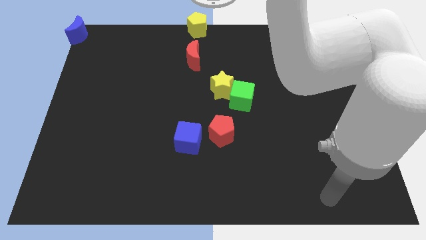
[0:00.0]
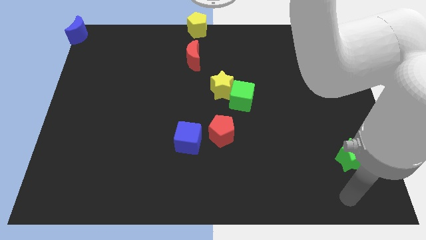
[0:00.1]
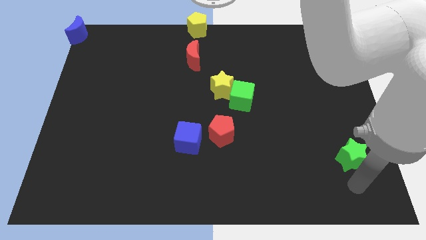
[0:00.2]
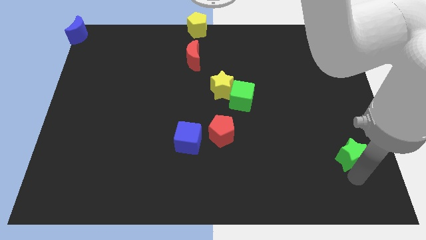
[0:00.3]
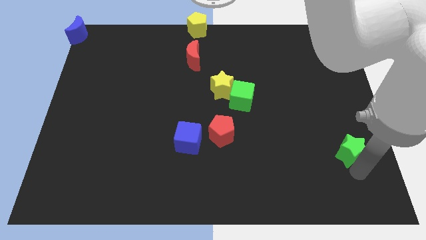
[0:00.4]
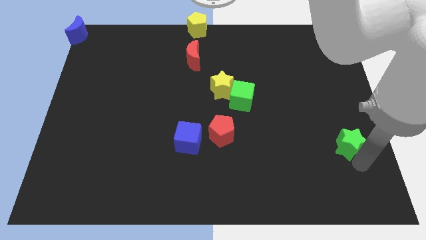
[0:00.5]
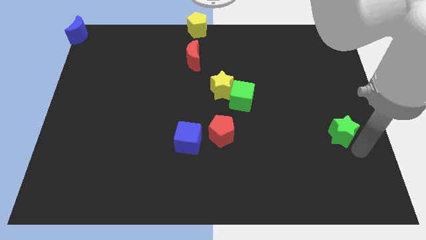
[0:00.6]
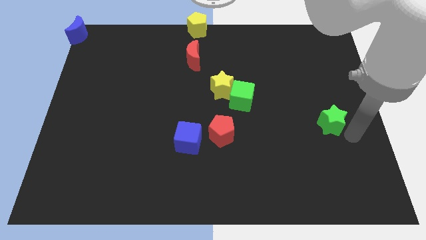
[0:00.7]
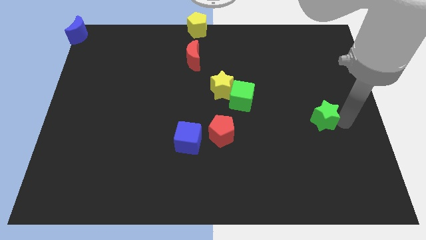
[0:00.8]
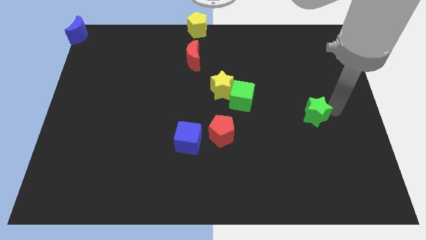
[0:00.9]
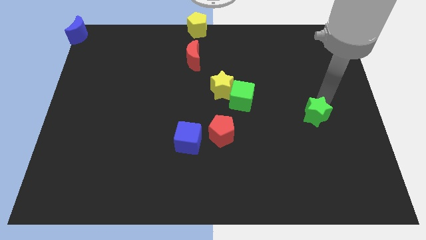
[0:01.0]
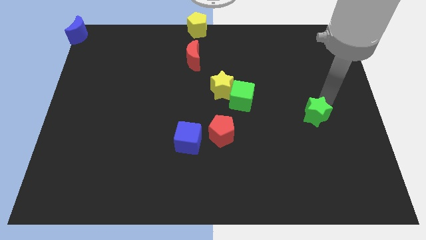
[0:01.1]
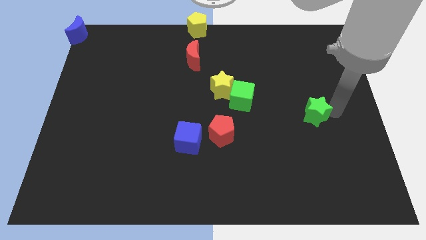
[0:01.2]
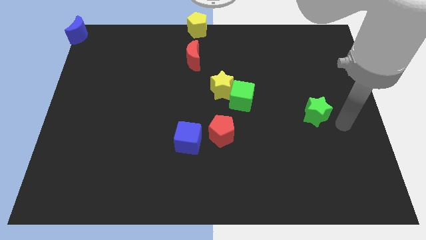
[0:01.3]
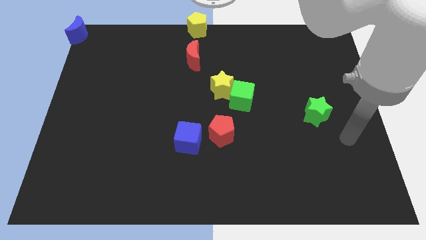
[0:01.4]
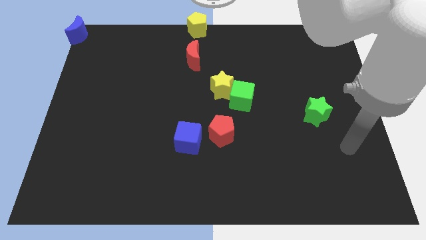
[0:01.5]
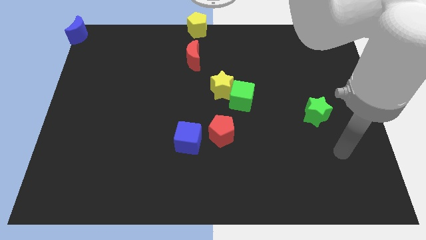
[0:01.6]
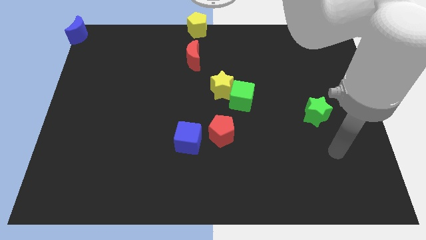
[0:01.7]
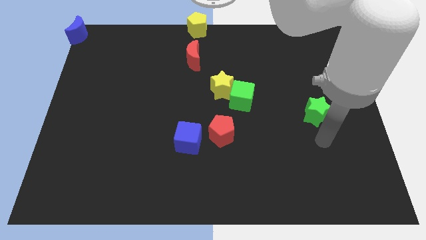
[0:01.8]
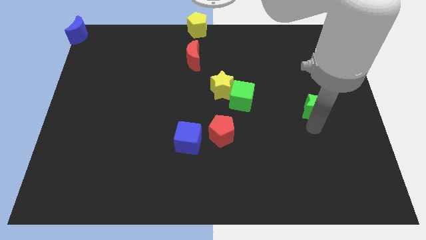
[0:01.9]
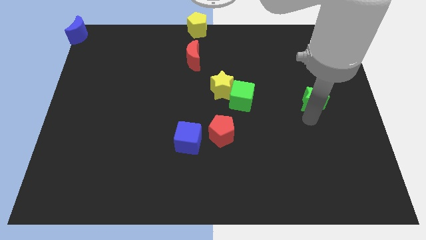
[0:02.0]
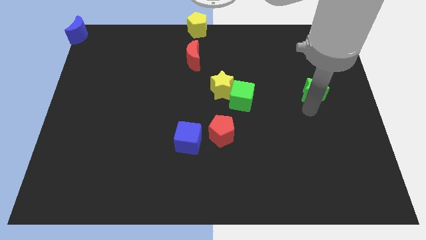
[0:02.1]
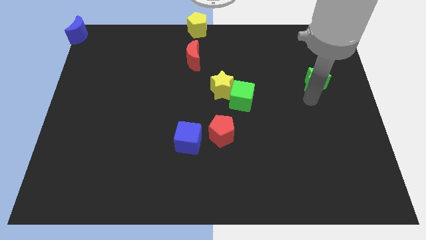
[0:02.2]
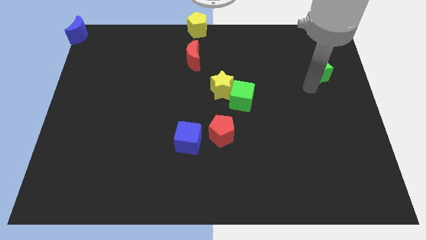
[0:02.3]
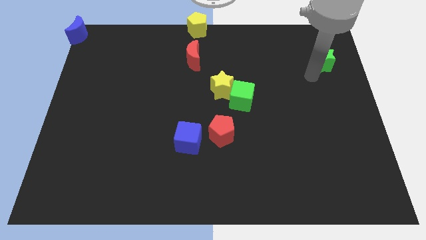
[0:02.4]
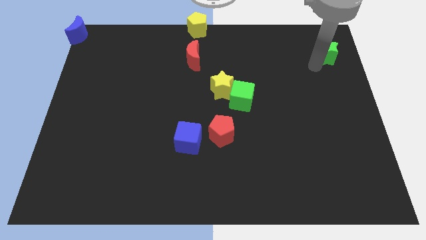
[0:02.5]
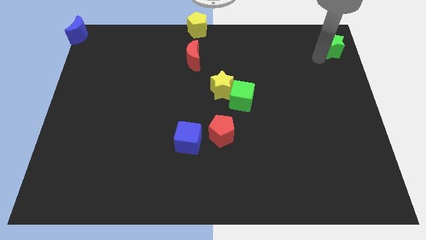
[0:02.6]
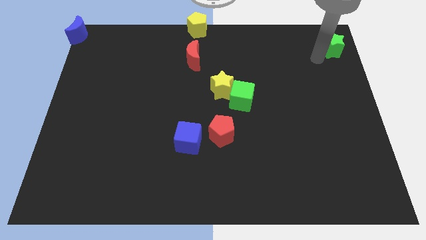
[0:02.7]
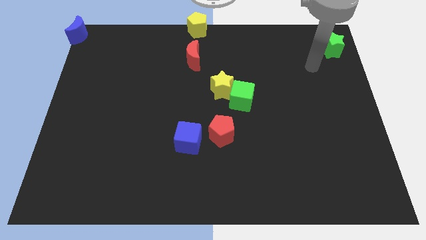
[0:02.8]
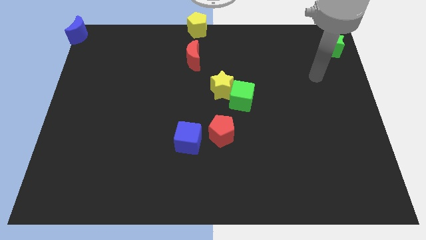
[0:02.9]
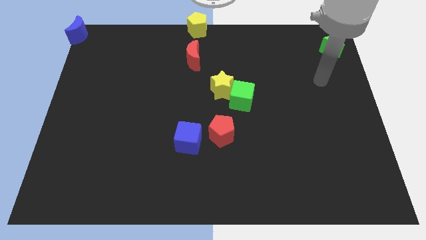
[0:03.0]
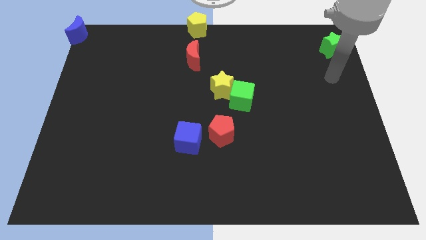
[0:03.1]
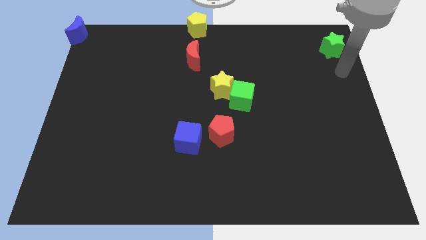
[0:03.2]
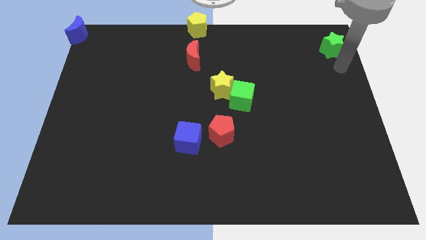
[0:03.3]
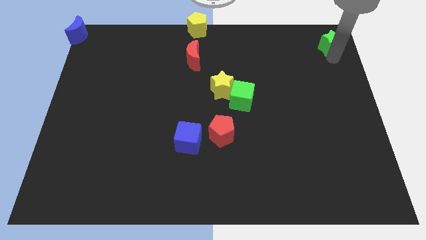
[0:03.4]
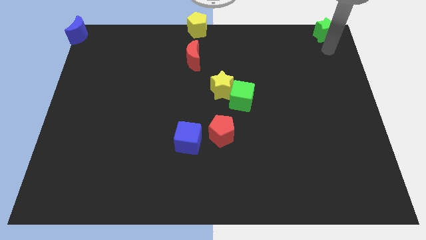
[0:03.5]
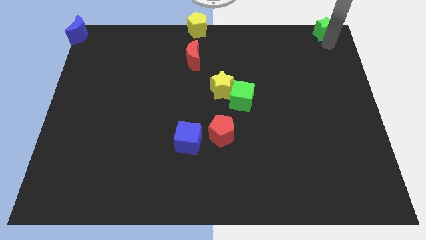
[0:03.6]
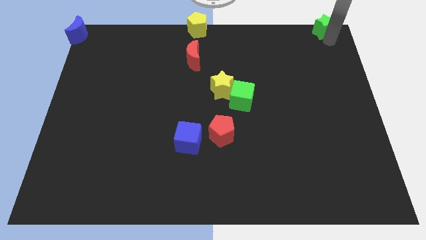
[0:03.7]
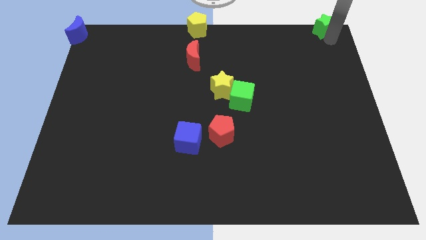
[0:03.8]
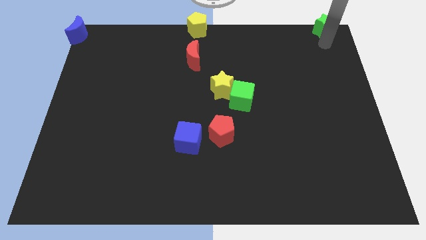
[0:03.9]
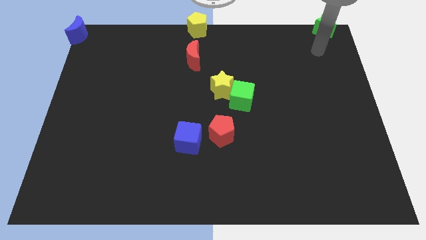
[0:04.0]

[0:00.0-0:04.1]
push the green star to the top right corner

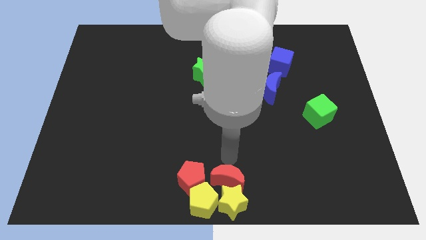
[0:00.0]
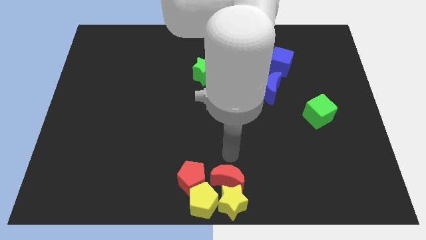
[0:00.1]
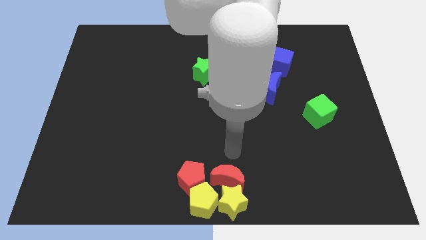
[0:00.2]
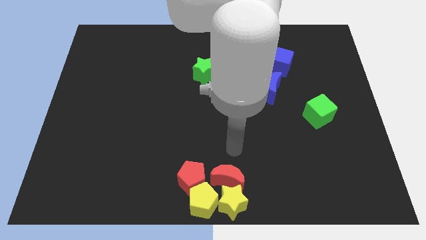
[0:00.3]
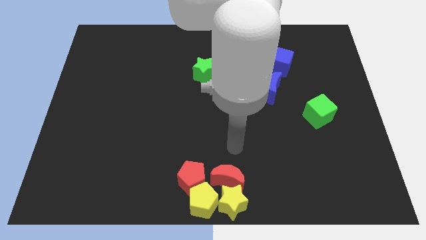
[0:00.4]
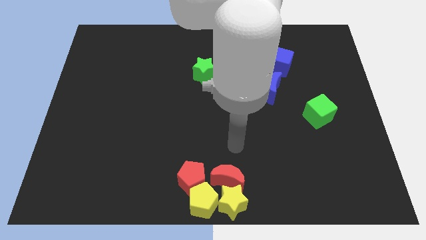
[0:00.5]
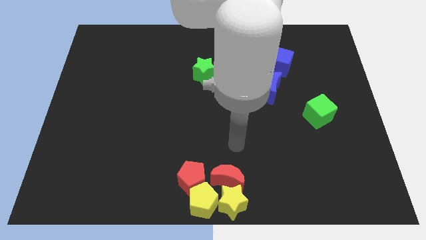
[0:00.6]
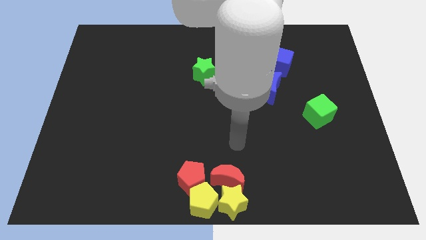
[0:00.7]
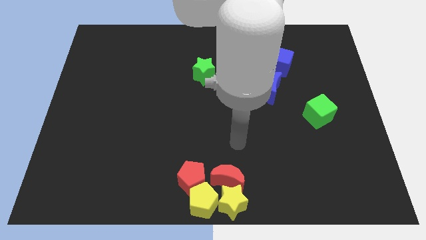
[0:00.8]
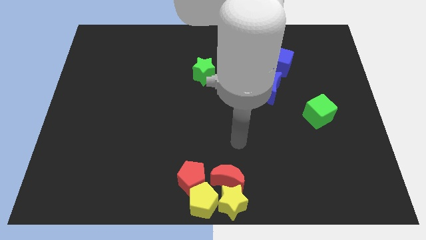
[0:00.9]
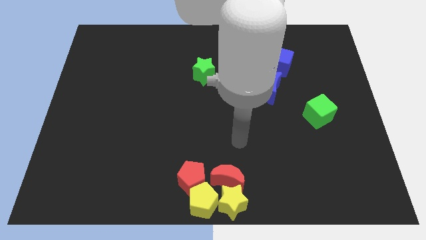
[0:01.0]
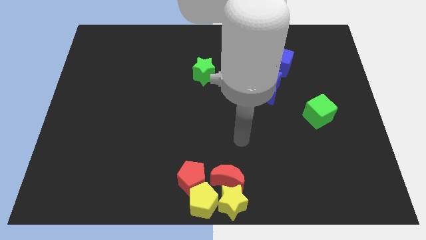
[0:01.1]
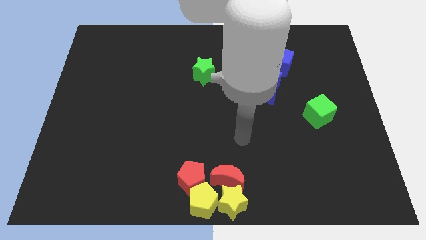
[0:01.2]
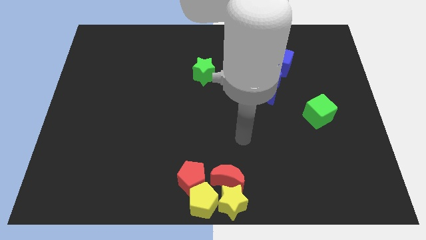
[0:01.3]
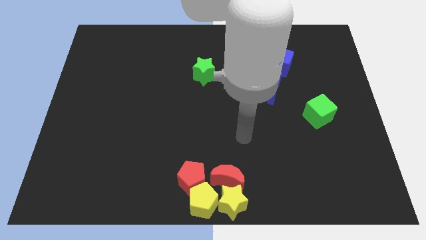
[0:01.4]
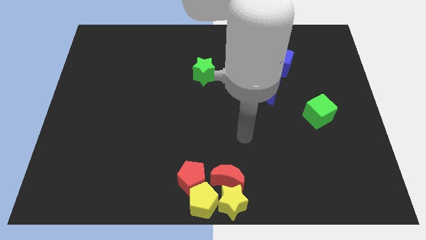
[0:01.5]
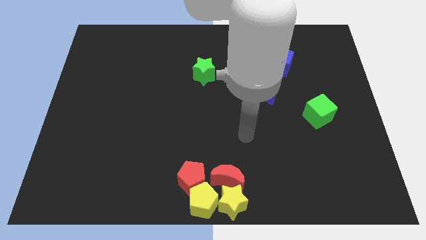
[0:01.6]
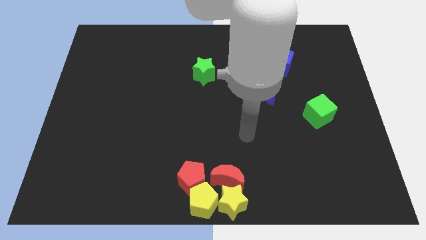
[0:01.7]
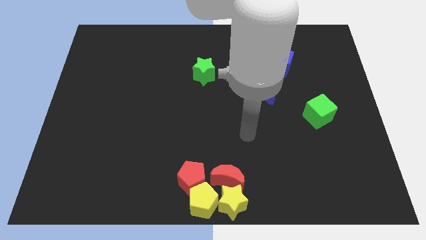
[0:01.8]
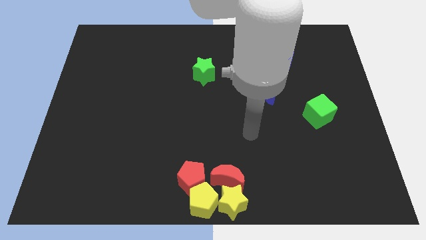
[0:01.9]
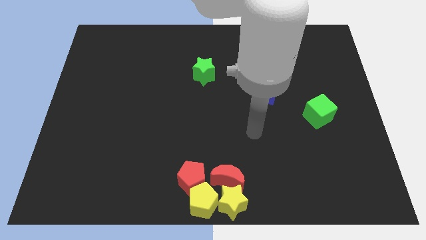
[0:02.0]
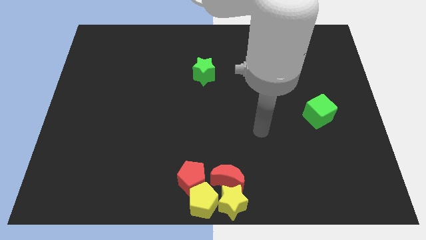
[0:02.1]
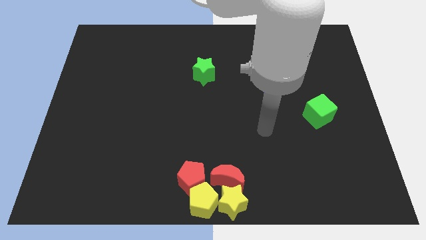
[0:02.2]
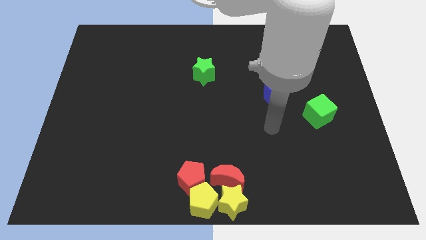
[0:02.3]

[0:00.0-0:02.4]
move your hand towards green cube

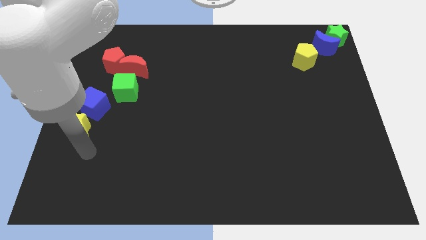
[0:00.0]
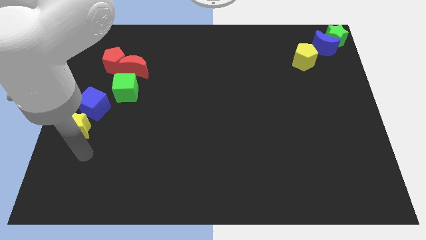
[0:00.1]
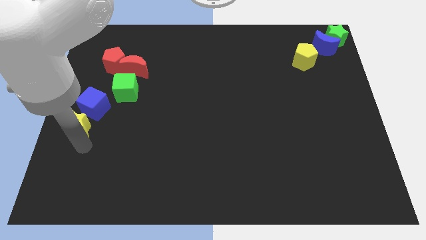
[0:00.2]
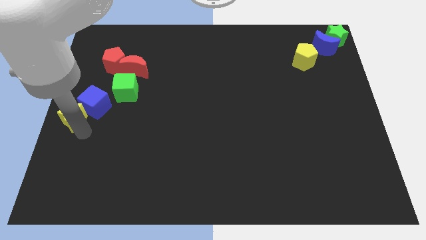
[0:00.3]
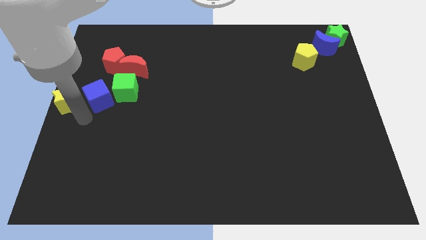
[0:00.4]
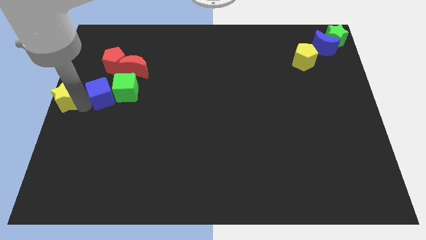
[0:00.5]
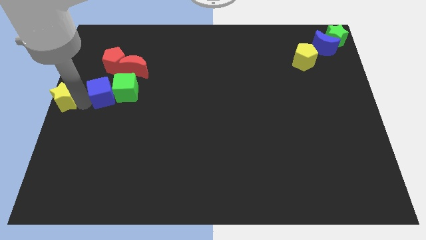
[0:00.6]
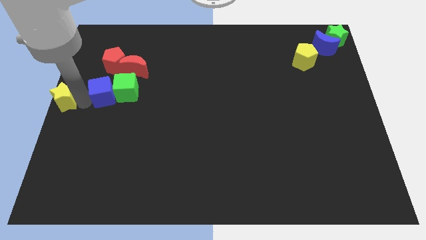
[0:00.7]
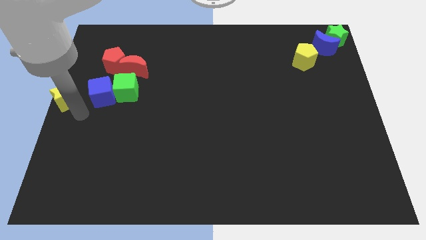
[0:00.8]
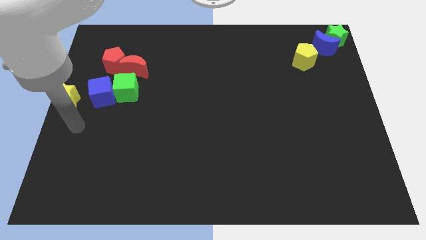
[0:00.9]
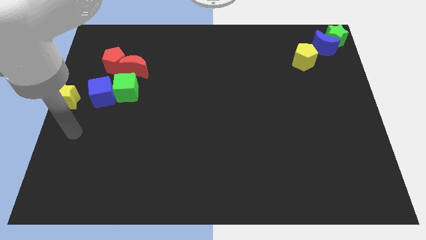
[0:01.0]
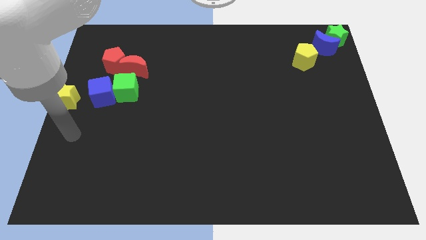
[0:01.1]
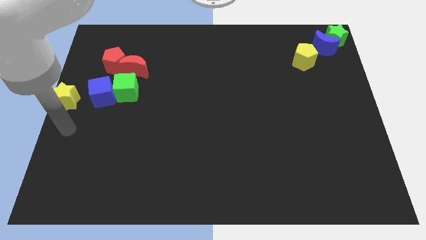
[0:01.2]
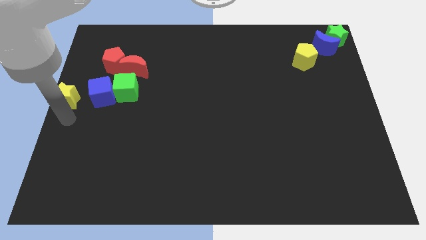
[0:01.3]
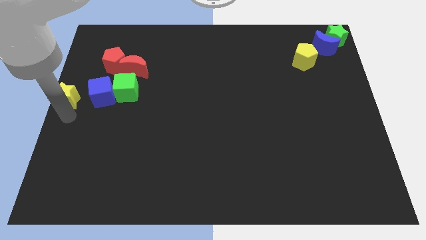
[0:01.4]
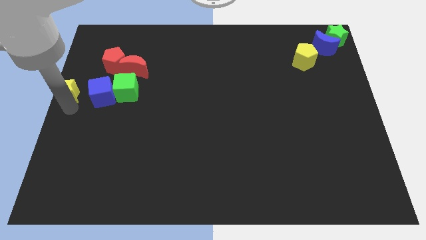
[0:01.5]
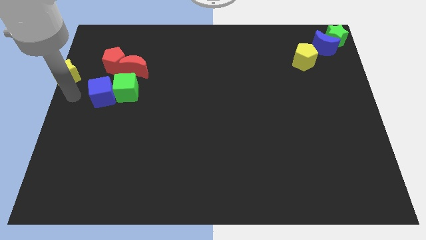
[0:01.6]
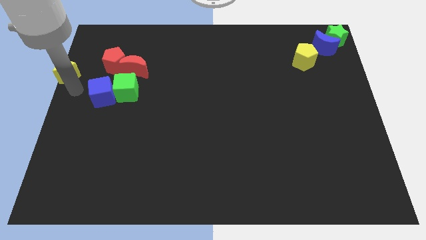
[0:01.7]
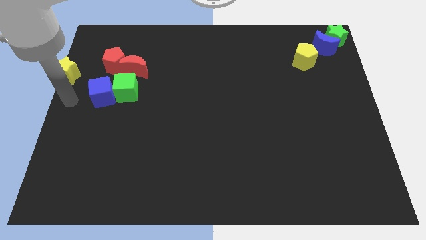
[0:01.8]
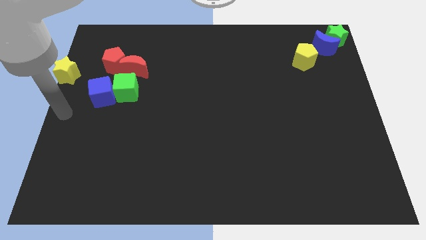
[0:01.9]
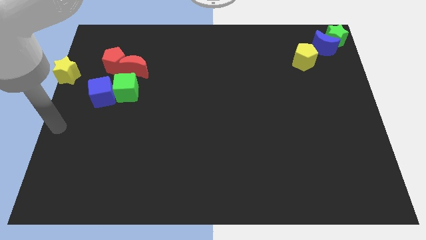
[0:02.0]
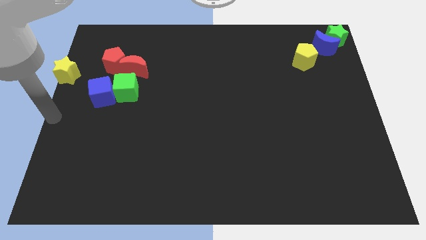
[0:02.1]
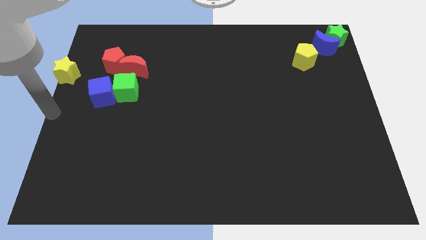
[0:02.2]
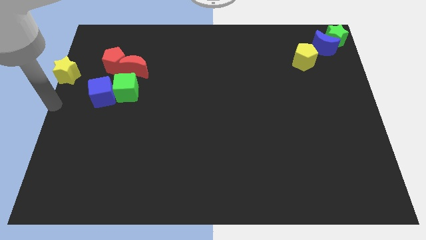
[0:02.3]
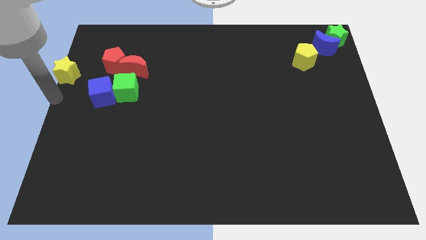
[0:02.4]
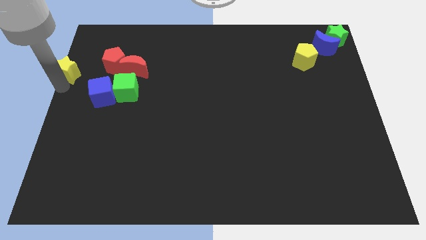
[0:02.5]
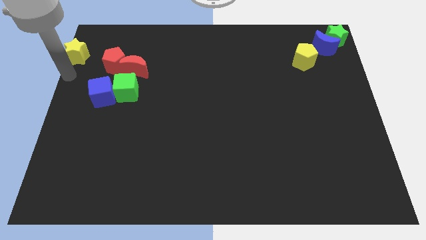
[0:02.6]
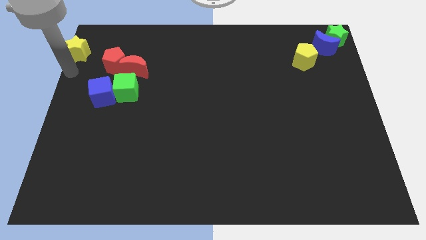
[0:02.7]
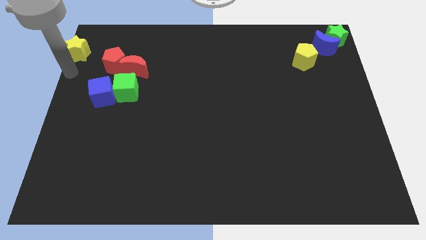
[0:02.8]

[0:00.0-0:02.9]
move the yellow star away from the blue cube
